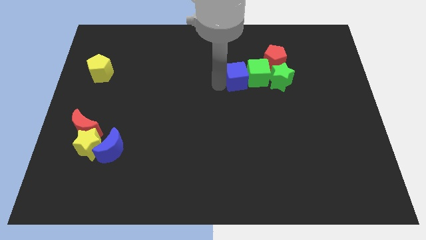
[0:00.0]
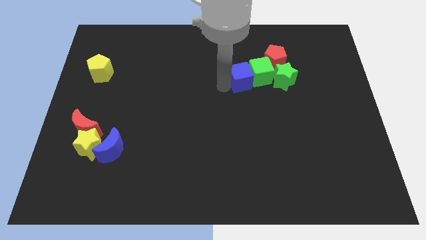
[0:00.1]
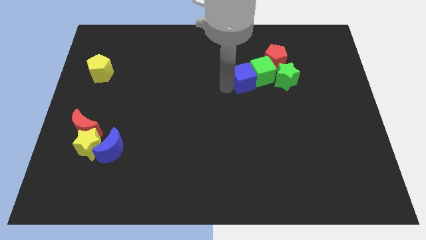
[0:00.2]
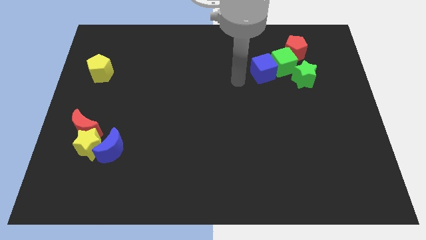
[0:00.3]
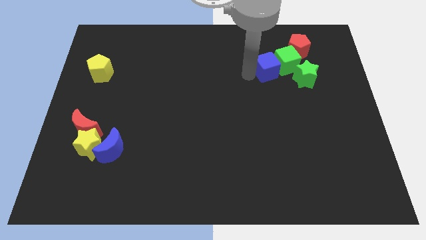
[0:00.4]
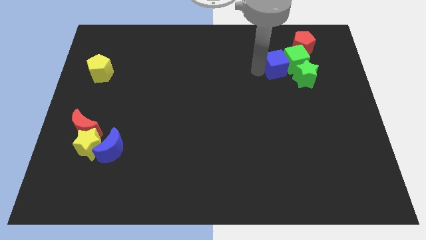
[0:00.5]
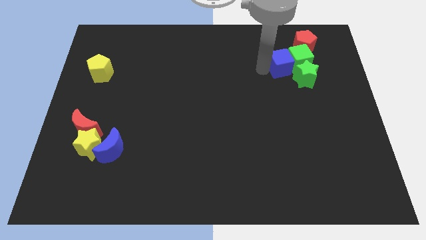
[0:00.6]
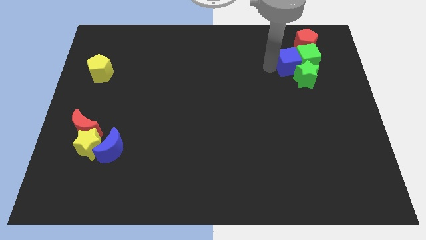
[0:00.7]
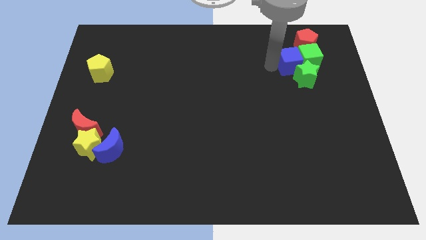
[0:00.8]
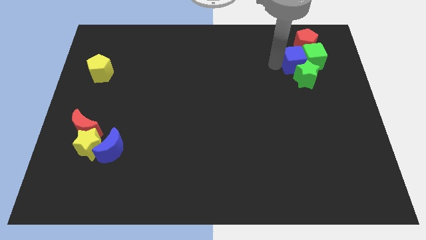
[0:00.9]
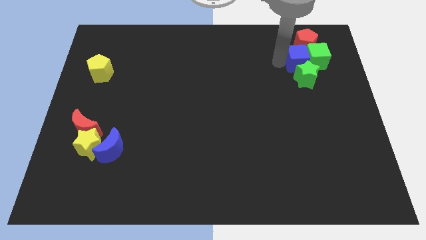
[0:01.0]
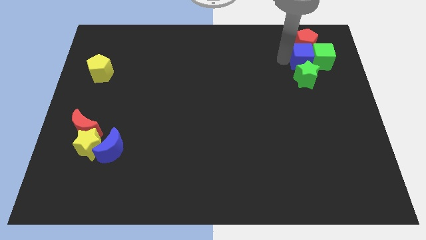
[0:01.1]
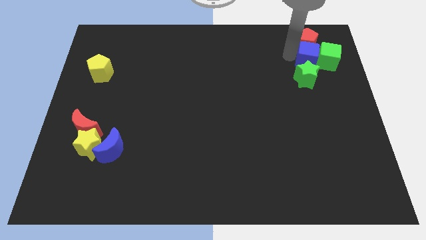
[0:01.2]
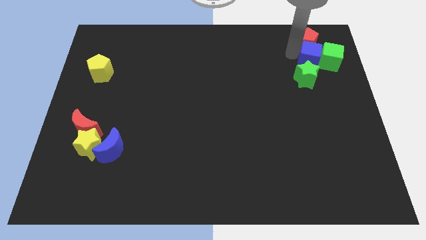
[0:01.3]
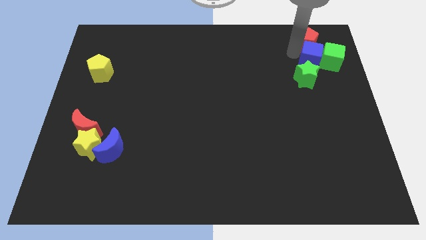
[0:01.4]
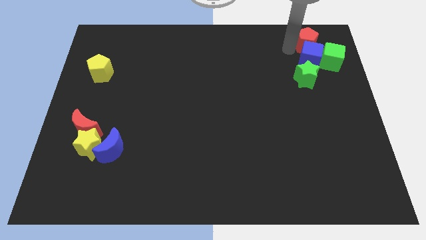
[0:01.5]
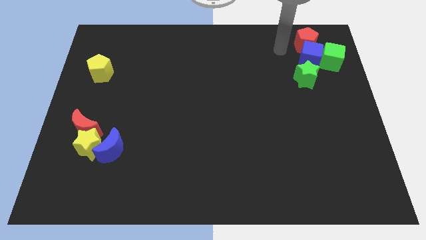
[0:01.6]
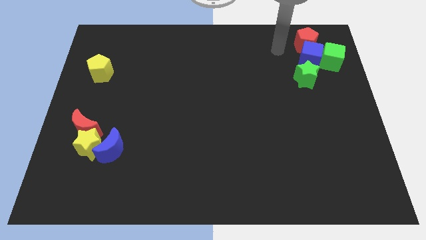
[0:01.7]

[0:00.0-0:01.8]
push blue cube to the bottom of the red pentagon

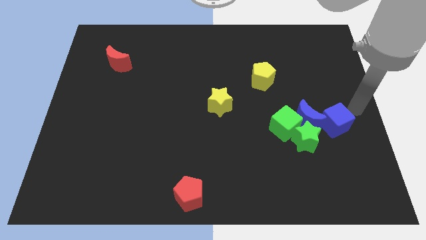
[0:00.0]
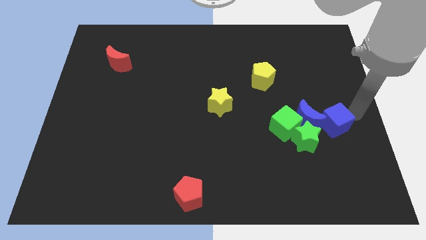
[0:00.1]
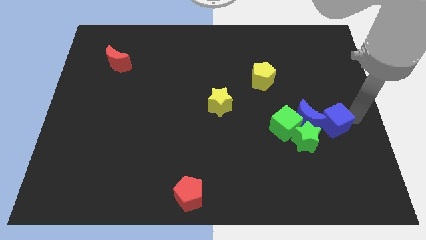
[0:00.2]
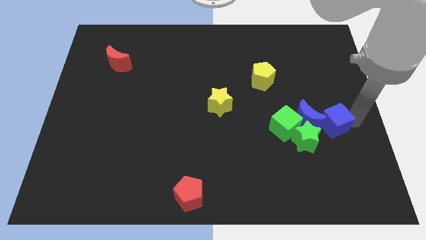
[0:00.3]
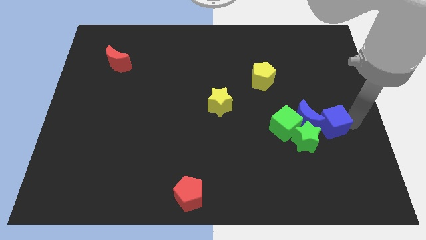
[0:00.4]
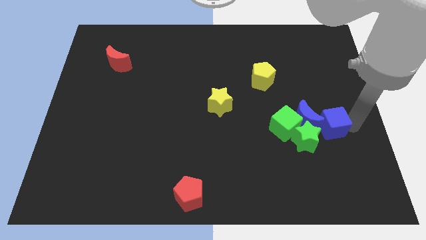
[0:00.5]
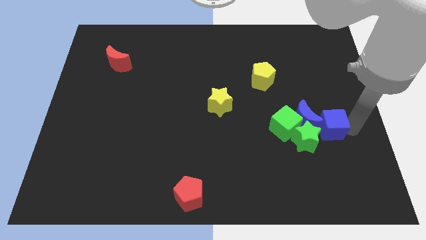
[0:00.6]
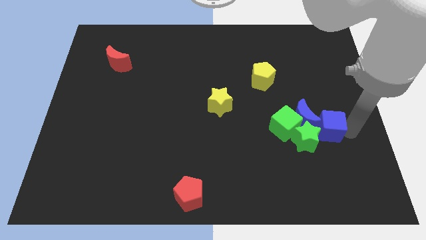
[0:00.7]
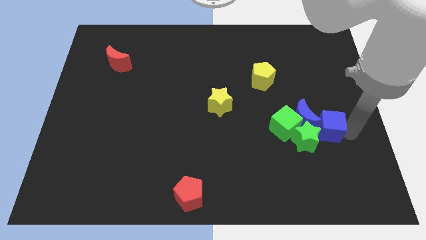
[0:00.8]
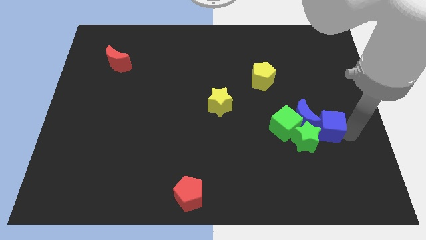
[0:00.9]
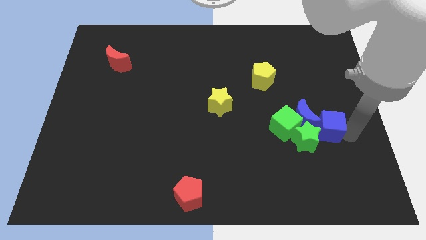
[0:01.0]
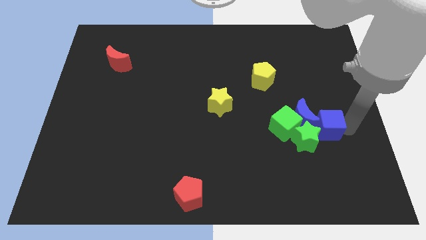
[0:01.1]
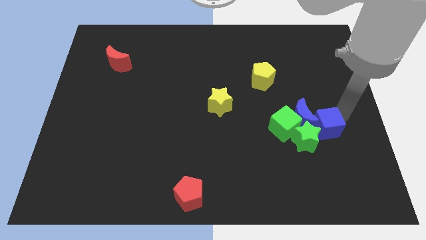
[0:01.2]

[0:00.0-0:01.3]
push the blue cube slightly into the group of blocks

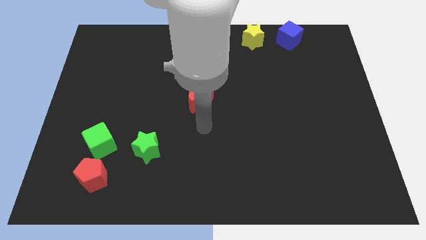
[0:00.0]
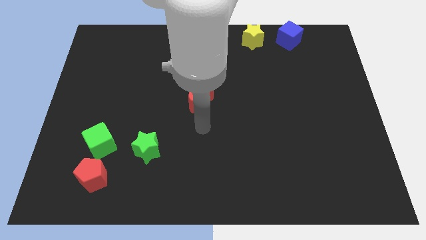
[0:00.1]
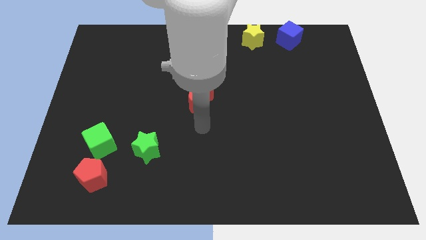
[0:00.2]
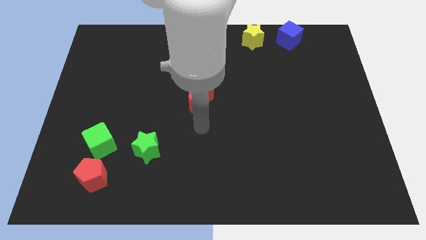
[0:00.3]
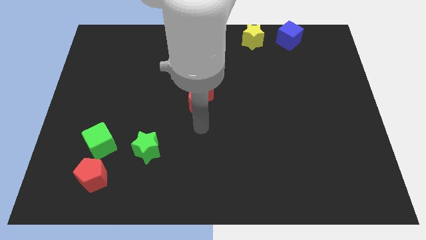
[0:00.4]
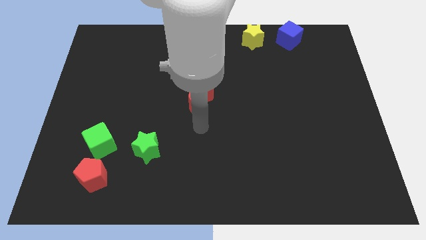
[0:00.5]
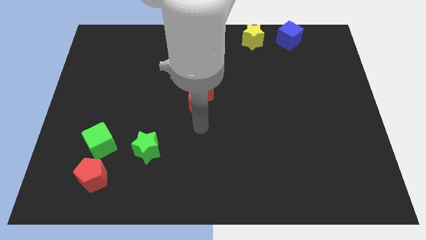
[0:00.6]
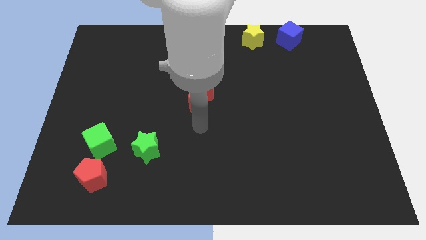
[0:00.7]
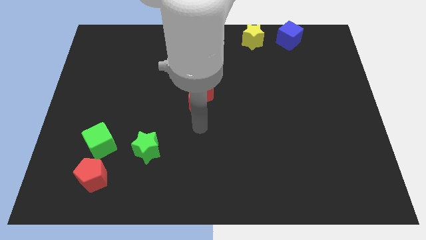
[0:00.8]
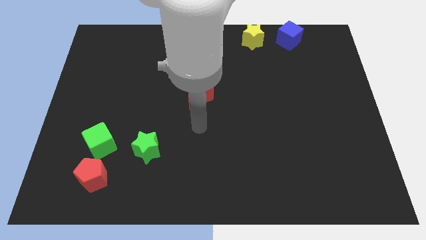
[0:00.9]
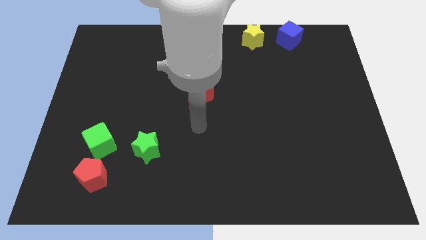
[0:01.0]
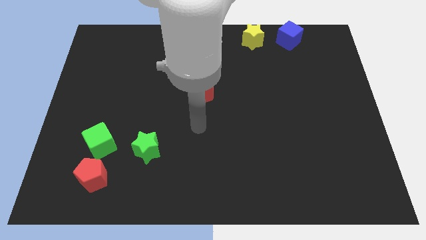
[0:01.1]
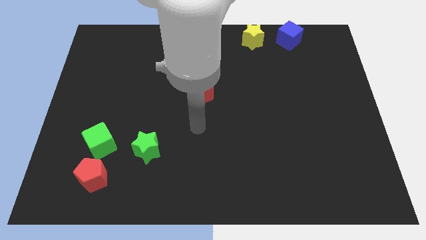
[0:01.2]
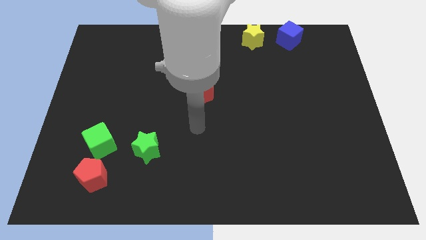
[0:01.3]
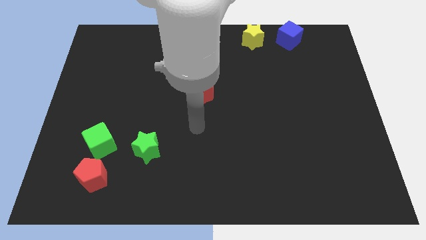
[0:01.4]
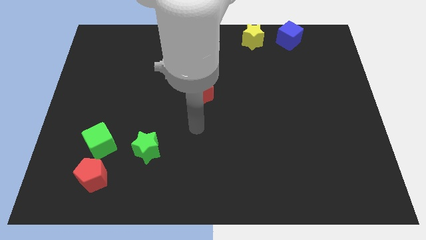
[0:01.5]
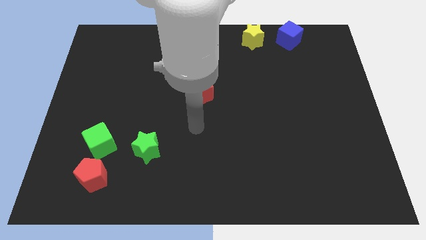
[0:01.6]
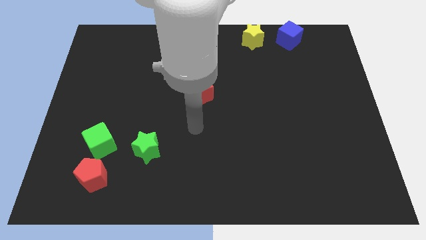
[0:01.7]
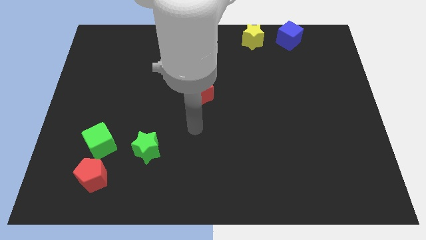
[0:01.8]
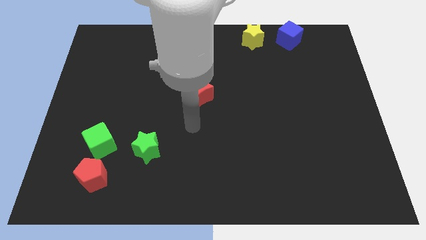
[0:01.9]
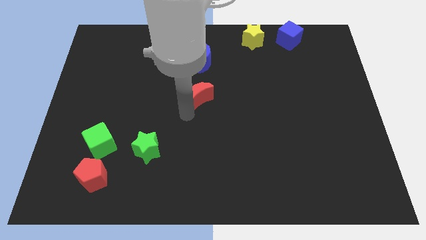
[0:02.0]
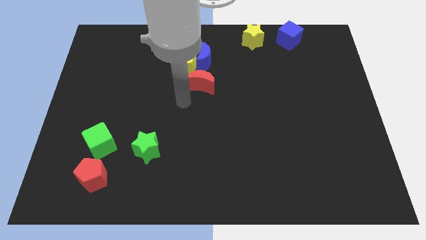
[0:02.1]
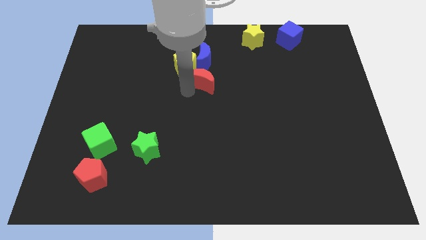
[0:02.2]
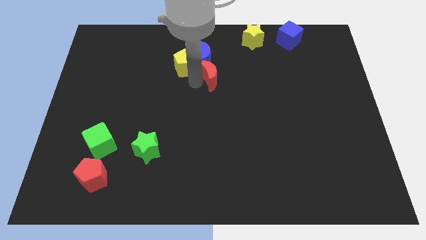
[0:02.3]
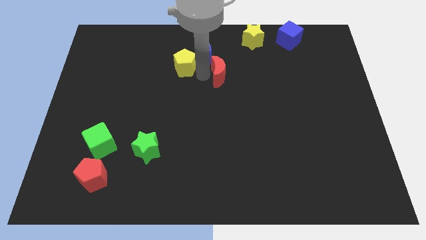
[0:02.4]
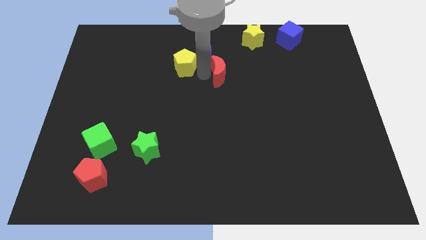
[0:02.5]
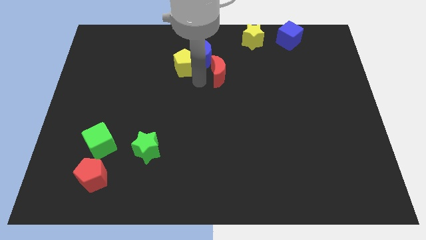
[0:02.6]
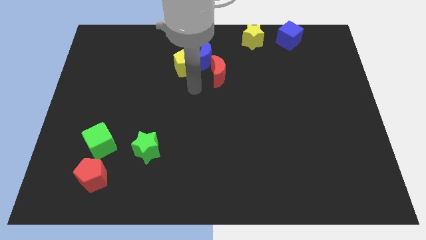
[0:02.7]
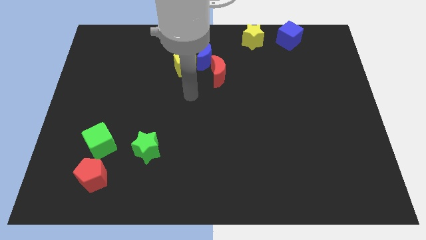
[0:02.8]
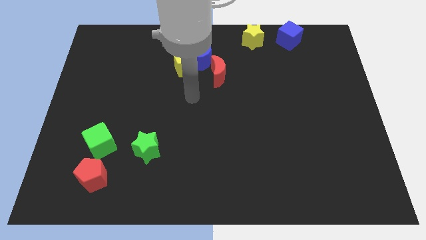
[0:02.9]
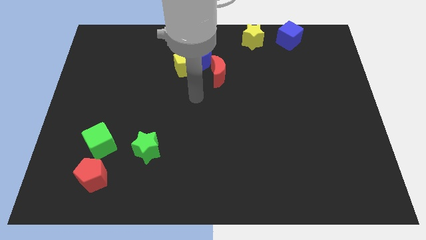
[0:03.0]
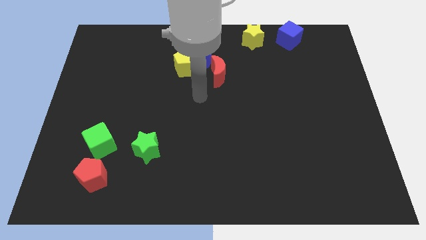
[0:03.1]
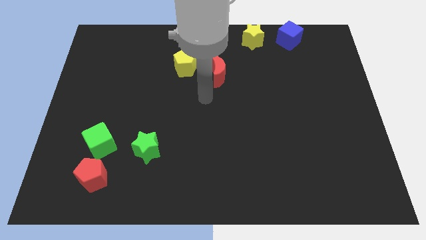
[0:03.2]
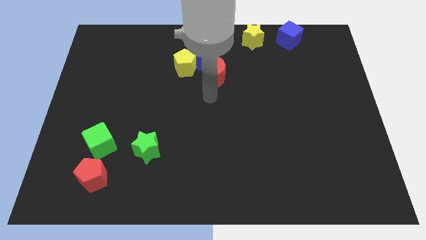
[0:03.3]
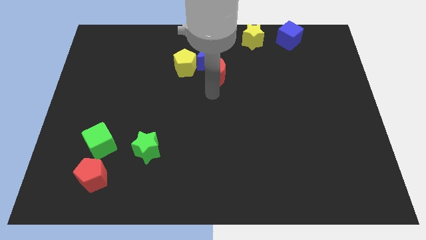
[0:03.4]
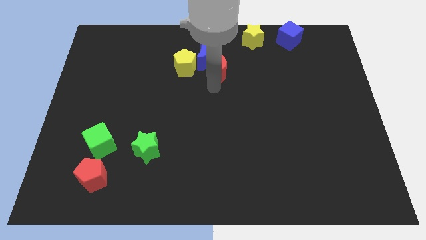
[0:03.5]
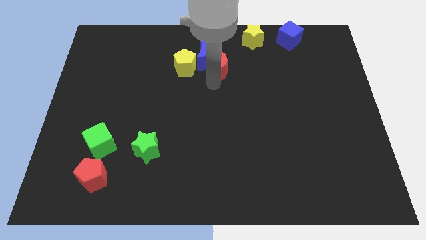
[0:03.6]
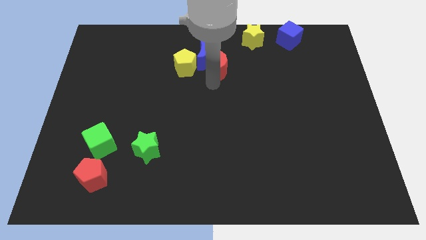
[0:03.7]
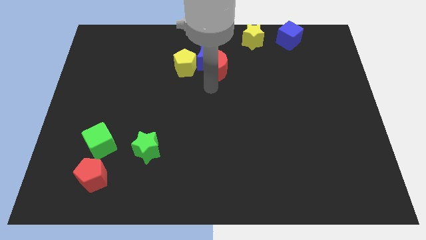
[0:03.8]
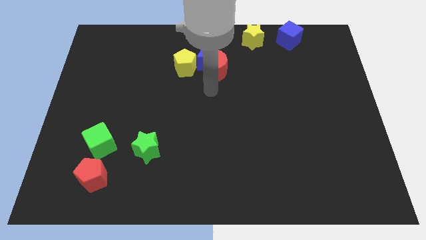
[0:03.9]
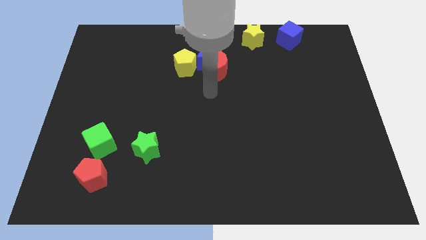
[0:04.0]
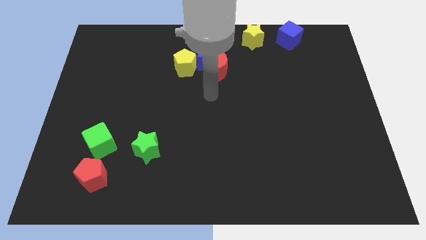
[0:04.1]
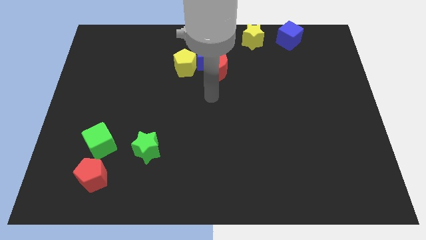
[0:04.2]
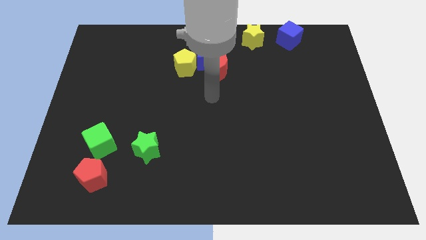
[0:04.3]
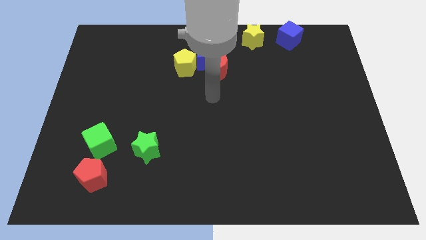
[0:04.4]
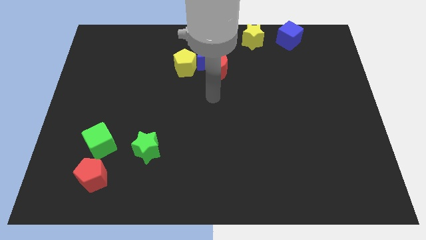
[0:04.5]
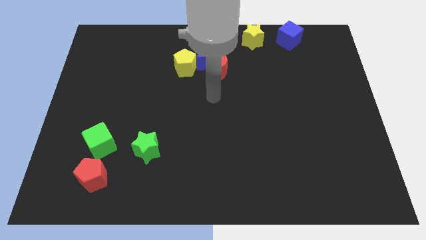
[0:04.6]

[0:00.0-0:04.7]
move the red crescent closer to the blue crescent

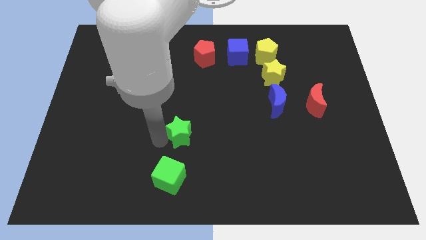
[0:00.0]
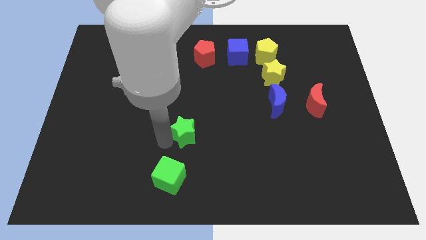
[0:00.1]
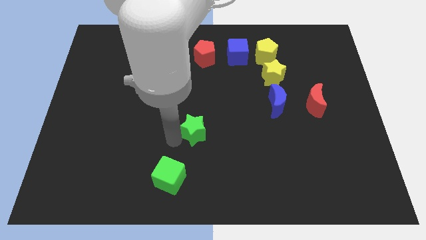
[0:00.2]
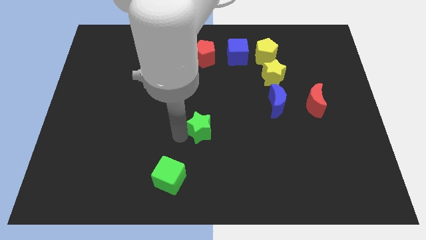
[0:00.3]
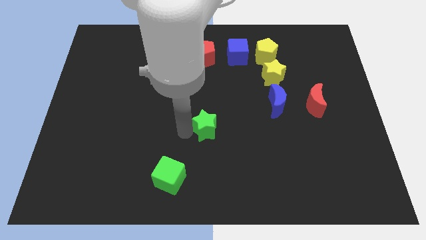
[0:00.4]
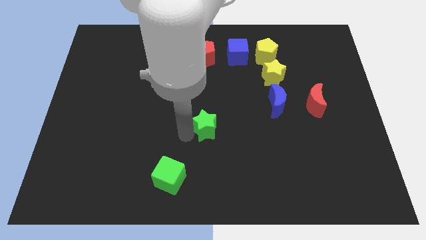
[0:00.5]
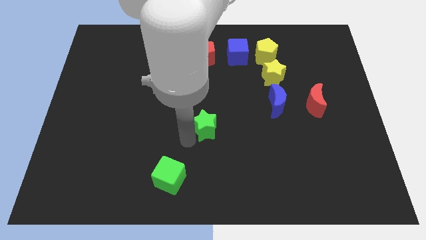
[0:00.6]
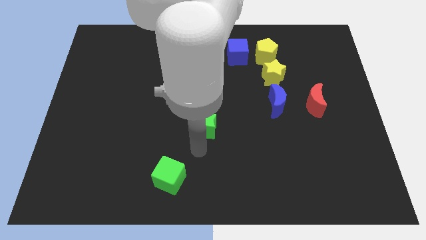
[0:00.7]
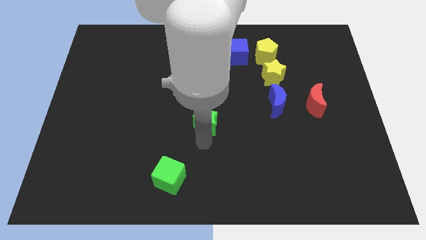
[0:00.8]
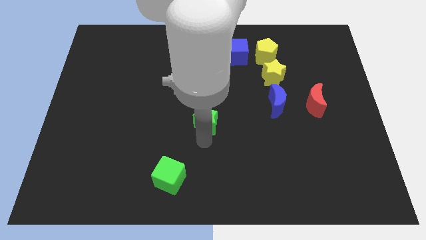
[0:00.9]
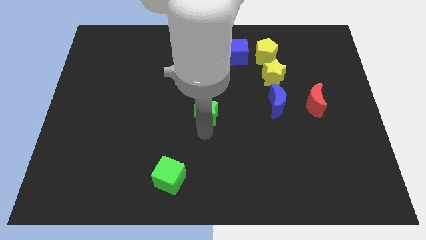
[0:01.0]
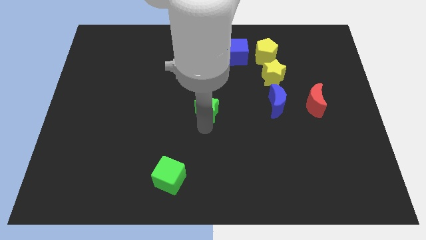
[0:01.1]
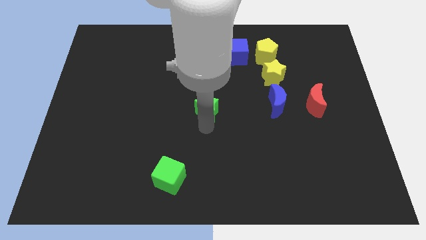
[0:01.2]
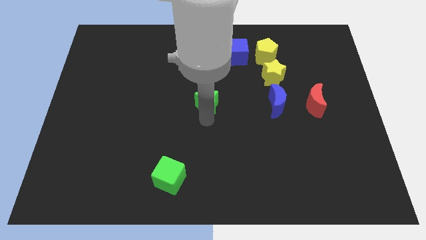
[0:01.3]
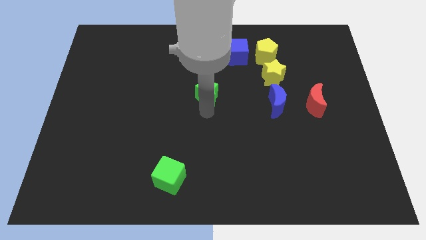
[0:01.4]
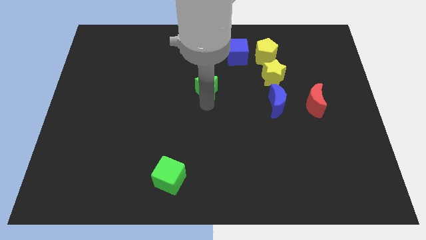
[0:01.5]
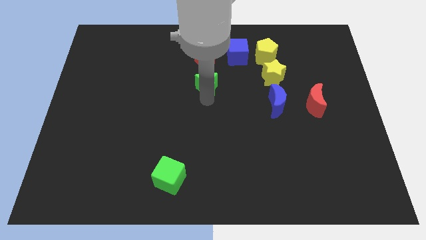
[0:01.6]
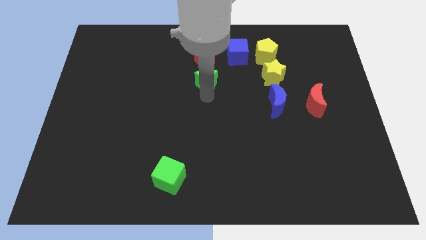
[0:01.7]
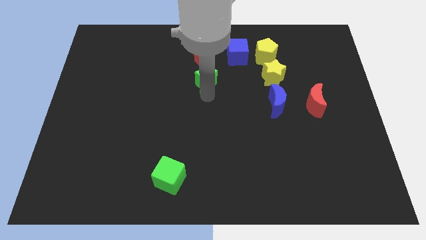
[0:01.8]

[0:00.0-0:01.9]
move the green star to the bottom of the red pentagon
